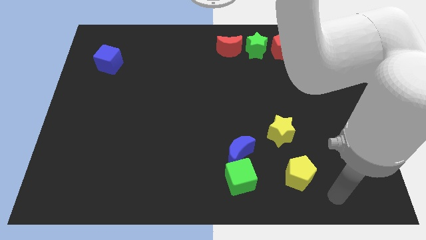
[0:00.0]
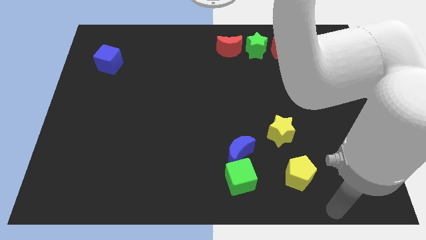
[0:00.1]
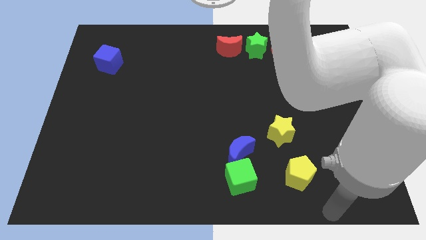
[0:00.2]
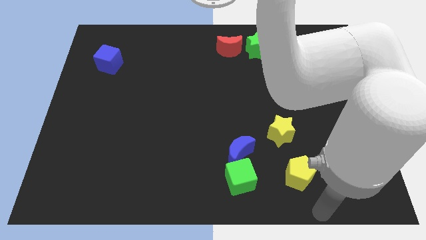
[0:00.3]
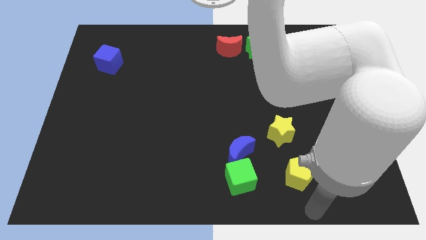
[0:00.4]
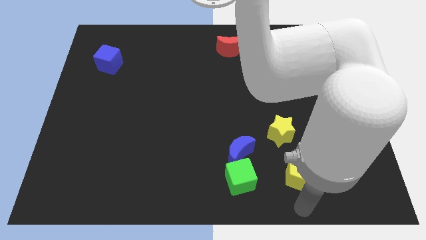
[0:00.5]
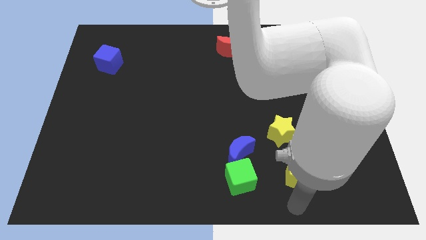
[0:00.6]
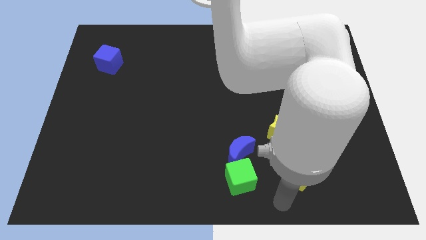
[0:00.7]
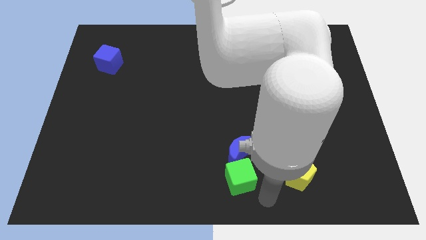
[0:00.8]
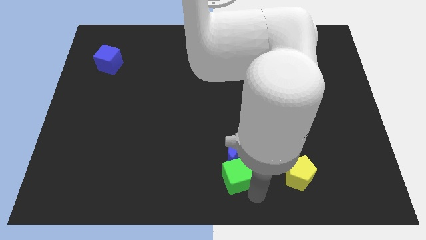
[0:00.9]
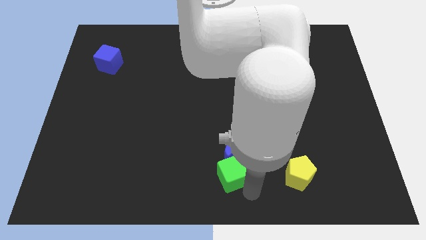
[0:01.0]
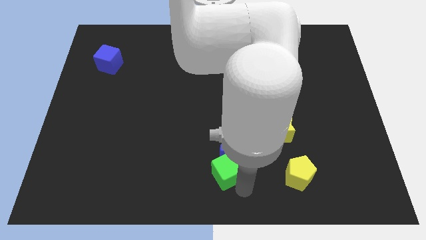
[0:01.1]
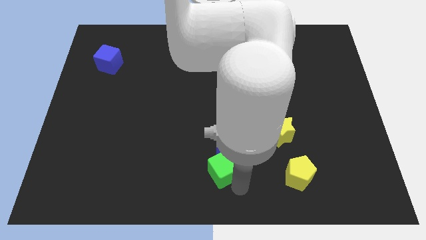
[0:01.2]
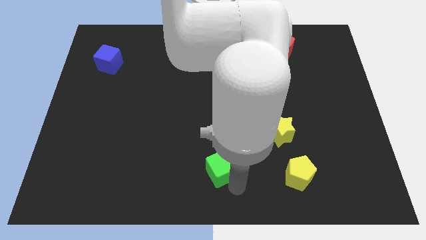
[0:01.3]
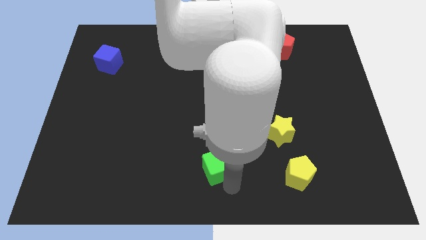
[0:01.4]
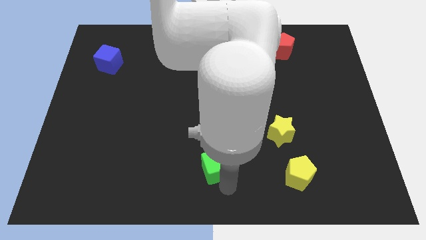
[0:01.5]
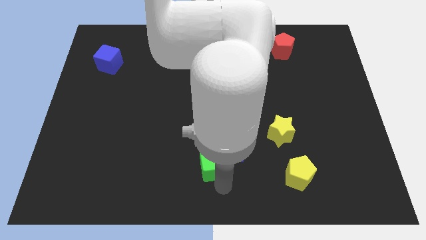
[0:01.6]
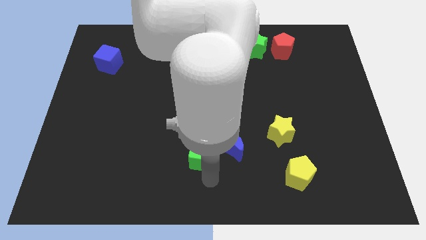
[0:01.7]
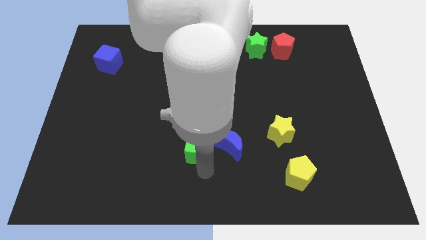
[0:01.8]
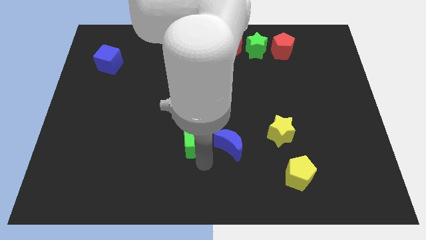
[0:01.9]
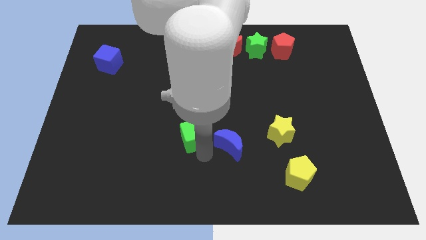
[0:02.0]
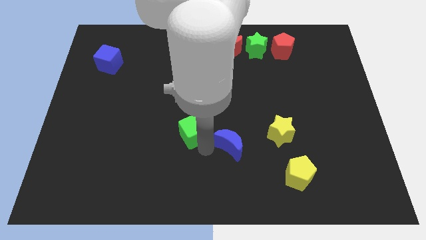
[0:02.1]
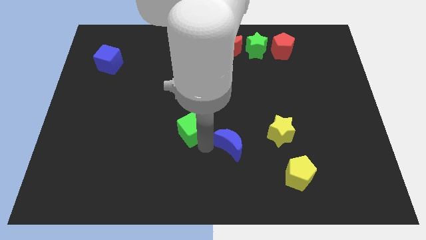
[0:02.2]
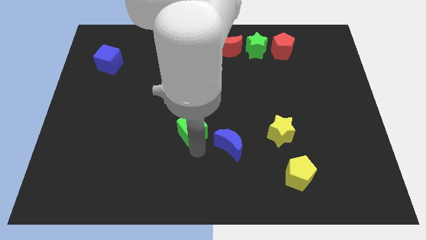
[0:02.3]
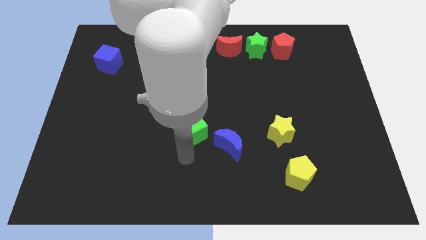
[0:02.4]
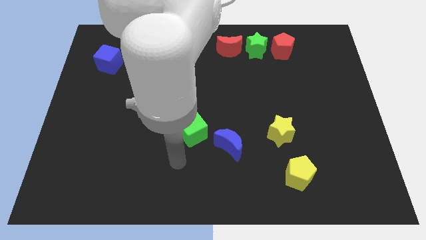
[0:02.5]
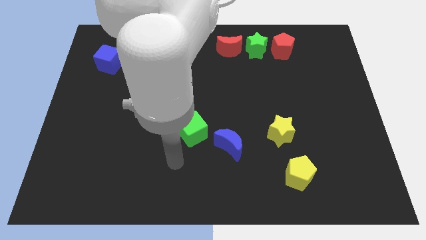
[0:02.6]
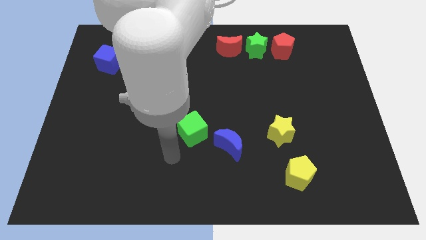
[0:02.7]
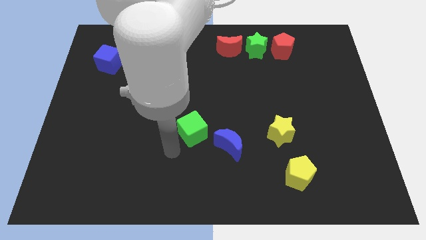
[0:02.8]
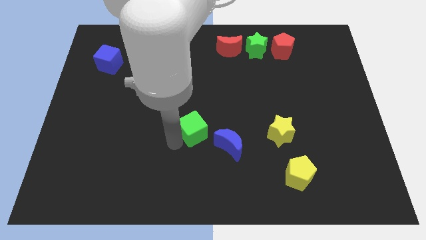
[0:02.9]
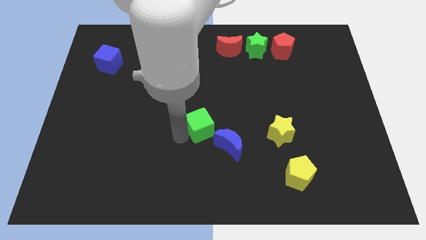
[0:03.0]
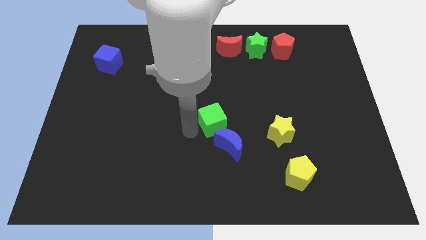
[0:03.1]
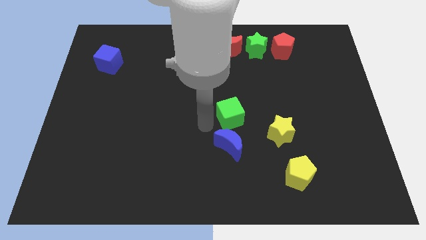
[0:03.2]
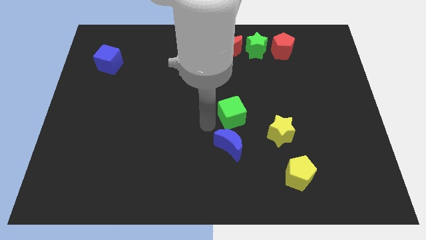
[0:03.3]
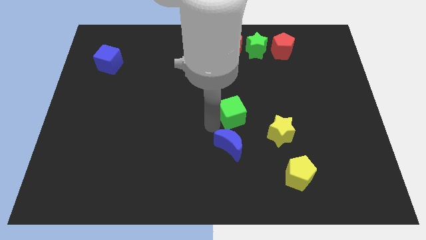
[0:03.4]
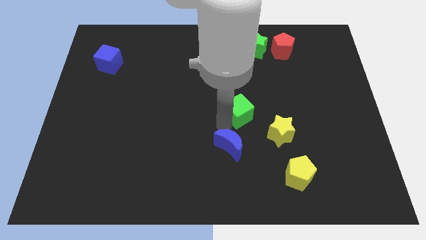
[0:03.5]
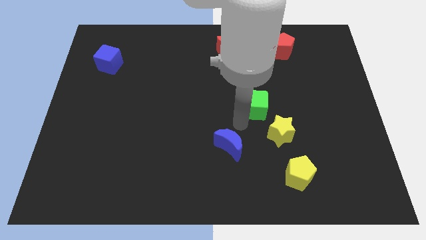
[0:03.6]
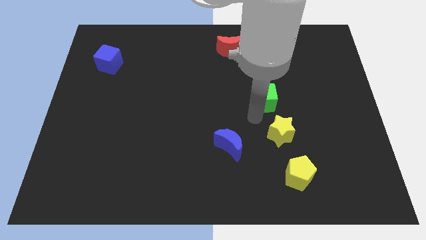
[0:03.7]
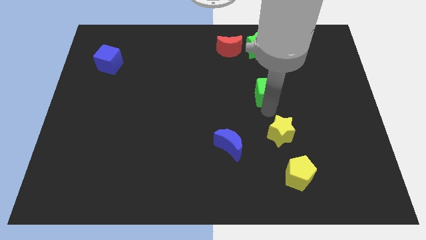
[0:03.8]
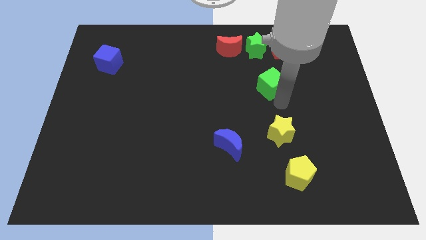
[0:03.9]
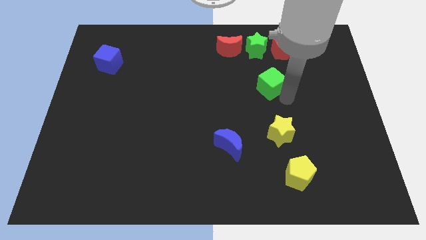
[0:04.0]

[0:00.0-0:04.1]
separate green cube from blue moon

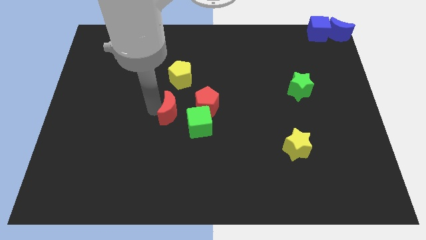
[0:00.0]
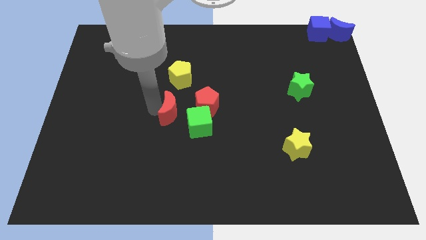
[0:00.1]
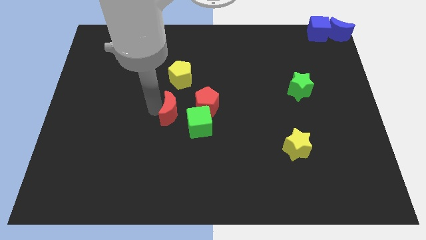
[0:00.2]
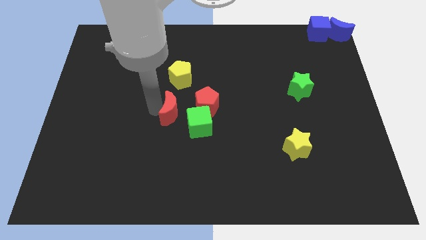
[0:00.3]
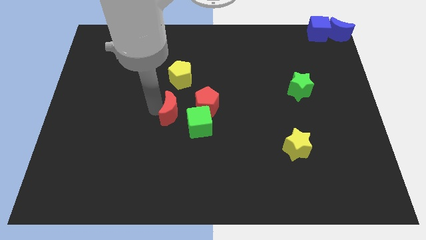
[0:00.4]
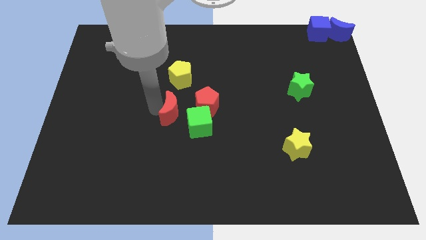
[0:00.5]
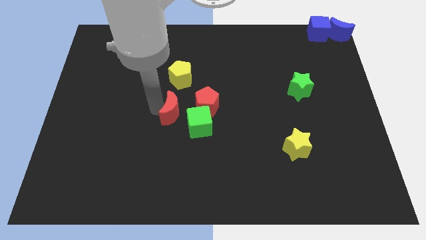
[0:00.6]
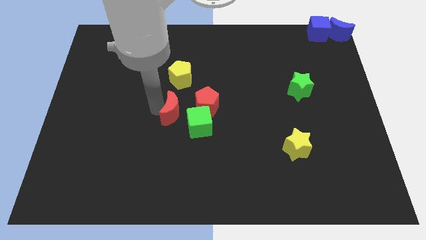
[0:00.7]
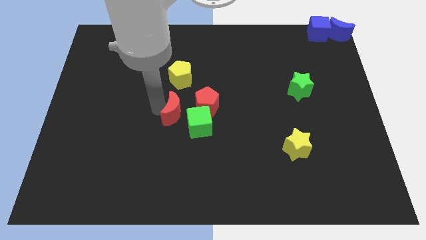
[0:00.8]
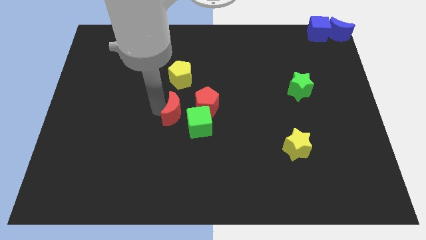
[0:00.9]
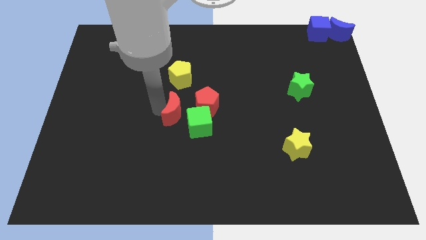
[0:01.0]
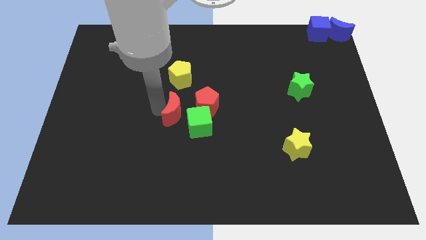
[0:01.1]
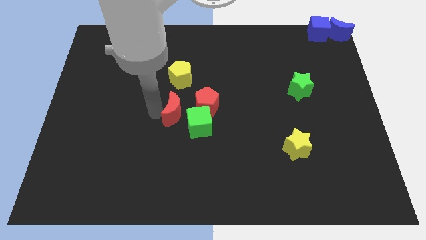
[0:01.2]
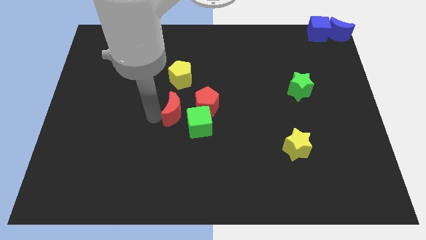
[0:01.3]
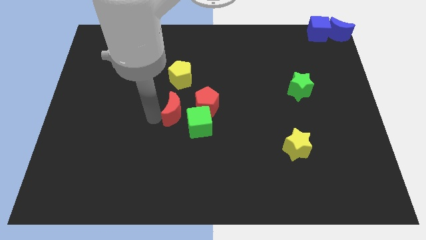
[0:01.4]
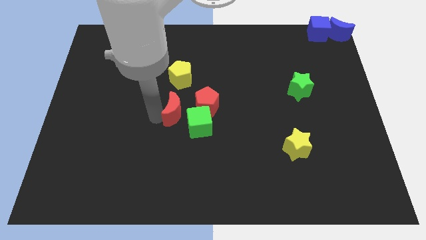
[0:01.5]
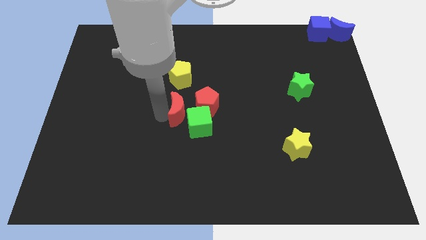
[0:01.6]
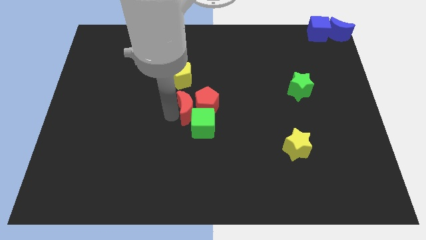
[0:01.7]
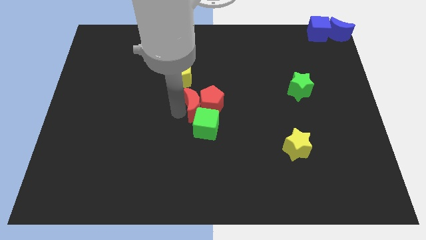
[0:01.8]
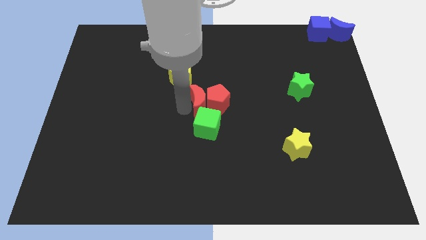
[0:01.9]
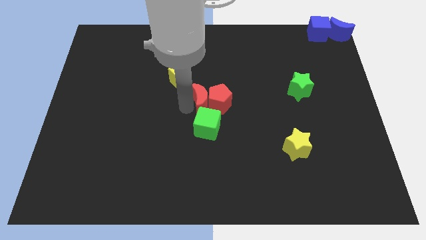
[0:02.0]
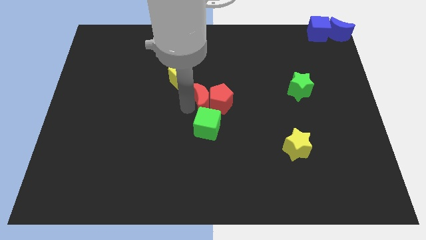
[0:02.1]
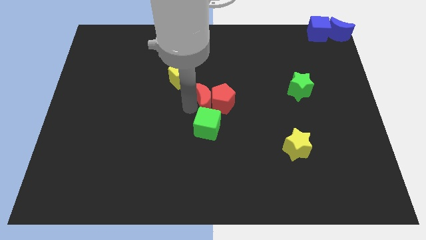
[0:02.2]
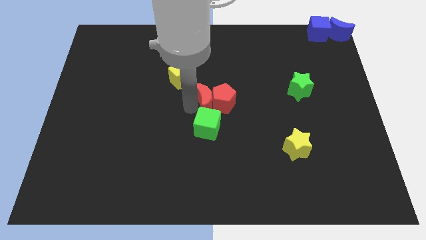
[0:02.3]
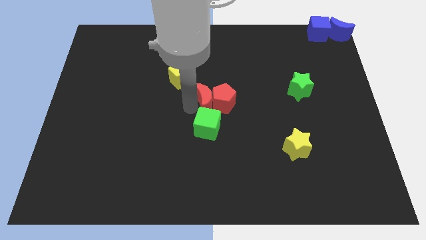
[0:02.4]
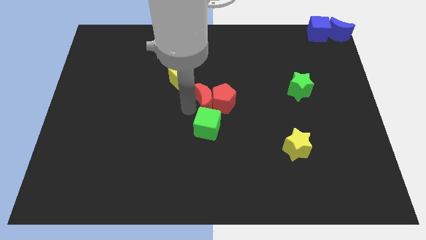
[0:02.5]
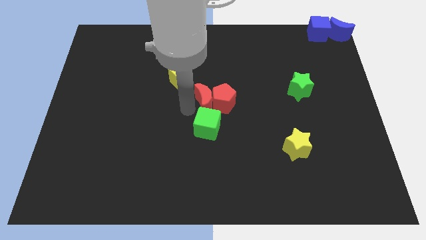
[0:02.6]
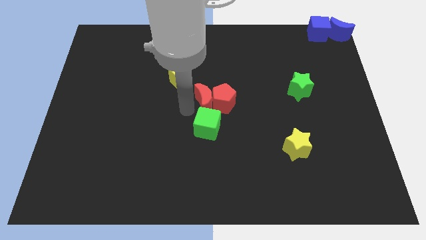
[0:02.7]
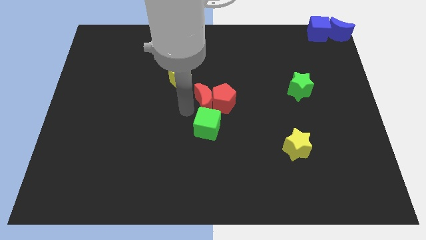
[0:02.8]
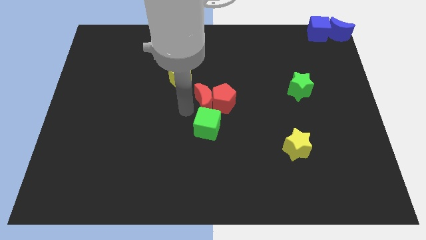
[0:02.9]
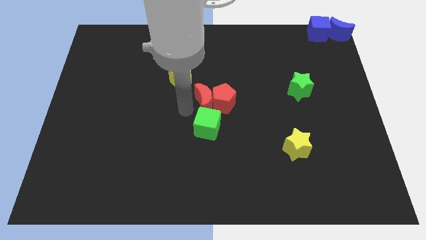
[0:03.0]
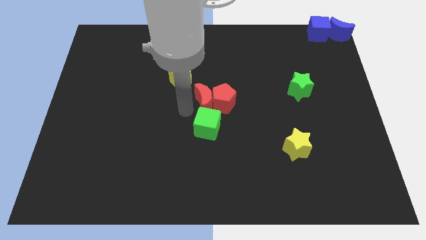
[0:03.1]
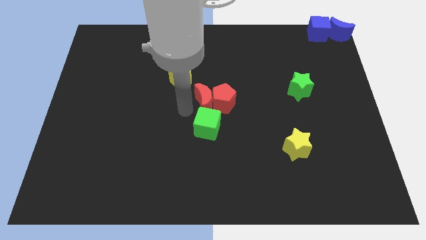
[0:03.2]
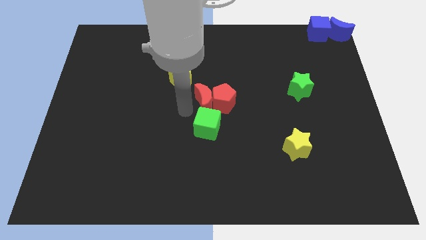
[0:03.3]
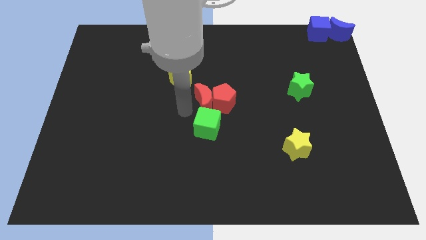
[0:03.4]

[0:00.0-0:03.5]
slide the red moon into the red pentagon

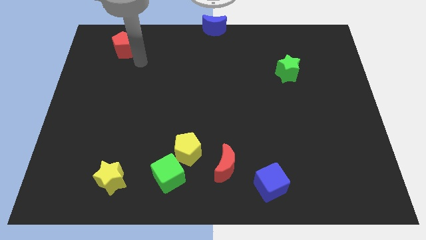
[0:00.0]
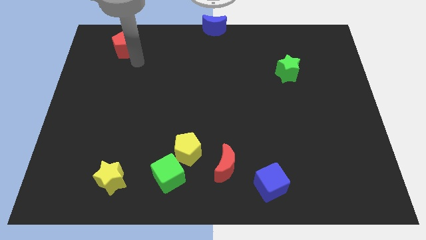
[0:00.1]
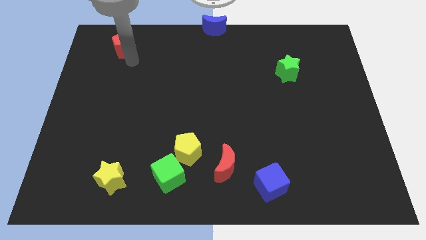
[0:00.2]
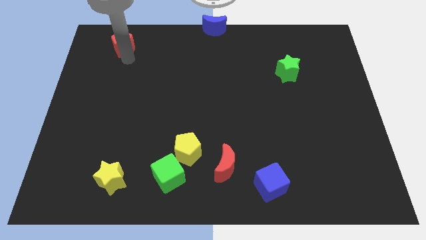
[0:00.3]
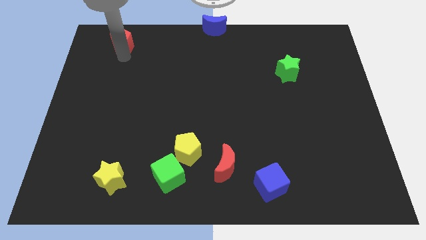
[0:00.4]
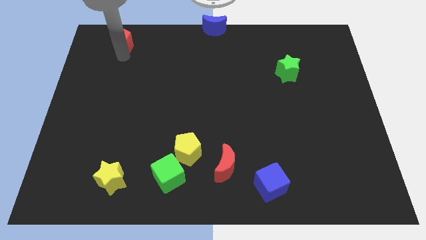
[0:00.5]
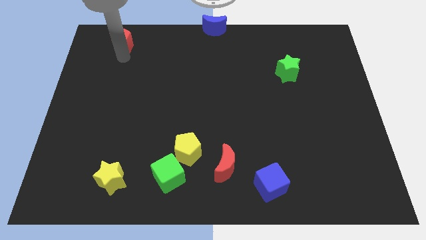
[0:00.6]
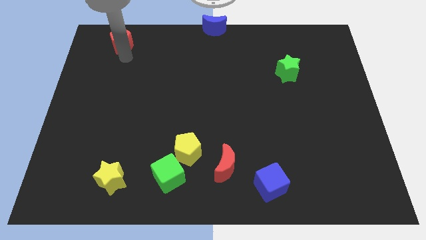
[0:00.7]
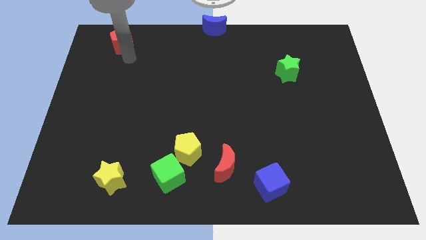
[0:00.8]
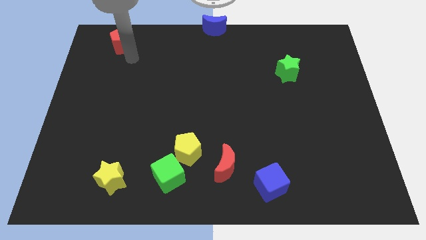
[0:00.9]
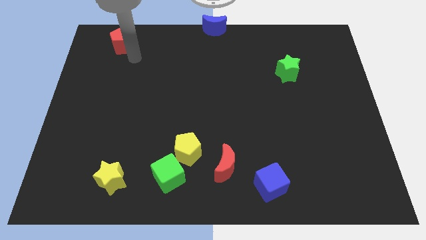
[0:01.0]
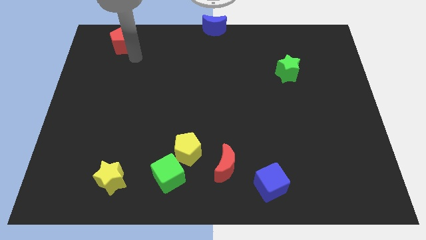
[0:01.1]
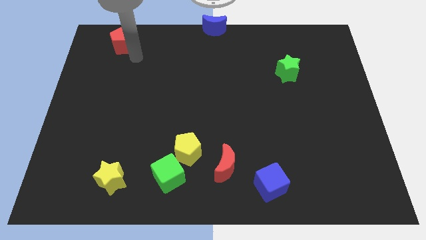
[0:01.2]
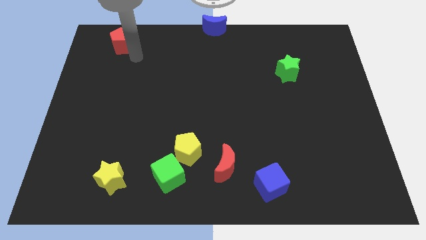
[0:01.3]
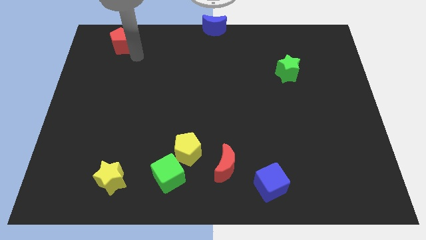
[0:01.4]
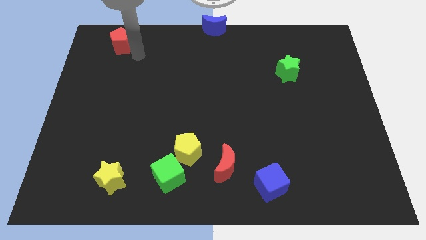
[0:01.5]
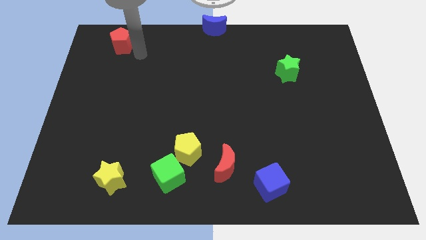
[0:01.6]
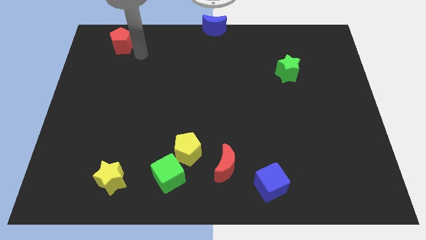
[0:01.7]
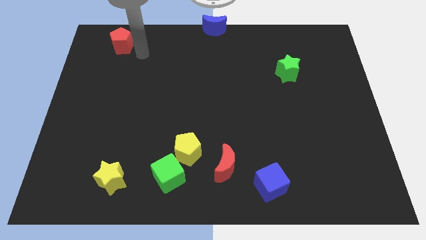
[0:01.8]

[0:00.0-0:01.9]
move the red pentagon to the top left
